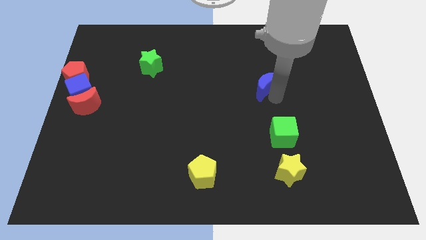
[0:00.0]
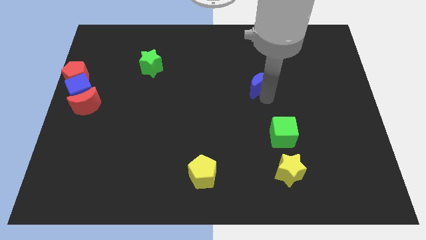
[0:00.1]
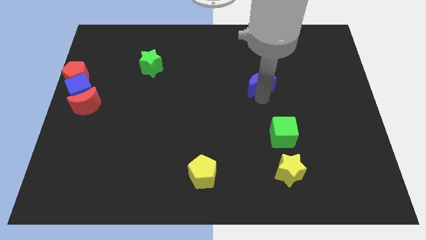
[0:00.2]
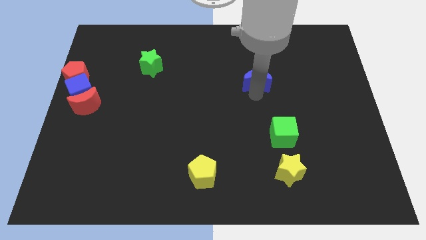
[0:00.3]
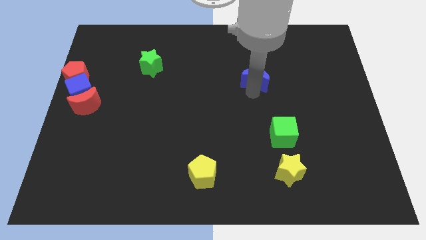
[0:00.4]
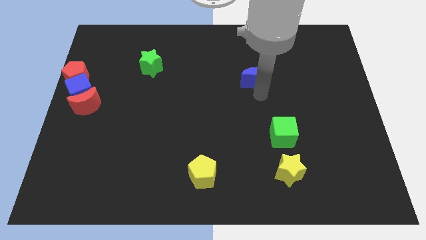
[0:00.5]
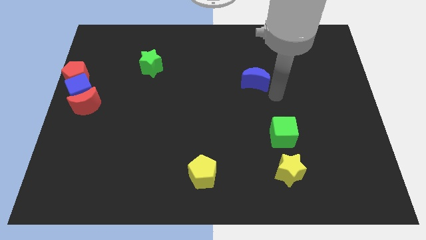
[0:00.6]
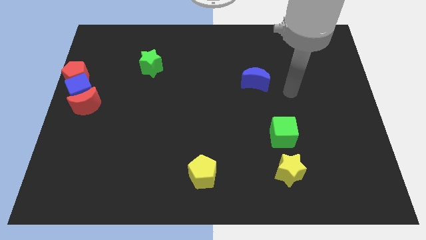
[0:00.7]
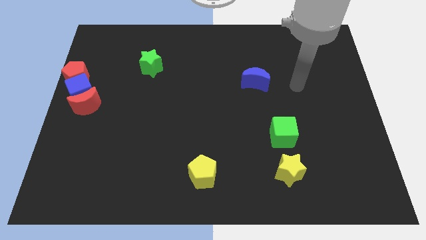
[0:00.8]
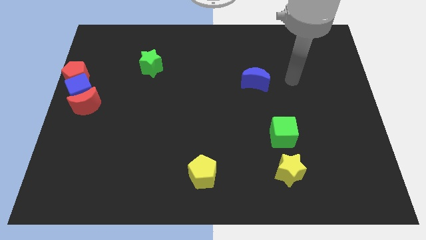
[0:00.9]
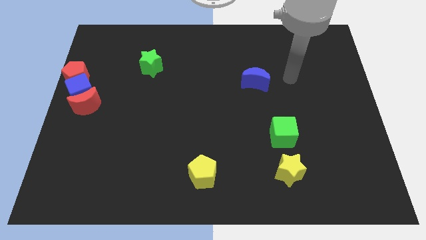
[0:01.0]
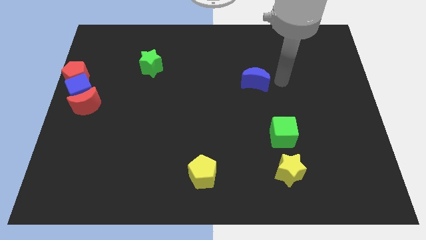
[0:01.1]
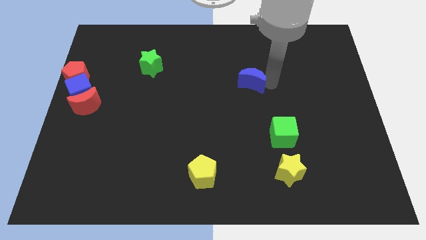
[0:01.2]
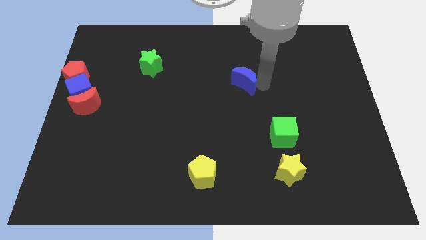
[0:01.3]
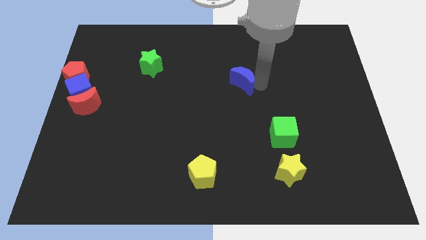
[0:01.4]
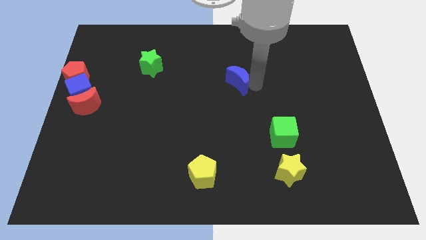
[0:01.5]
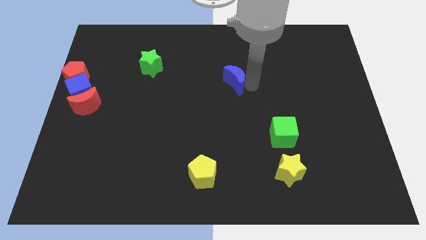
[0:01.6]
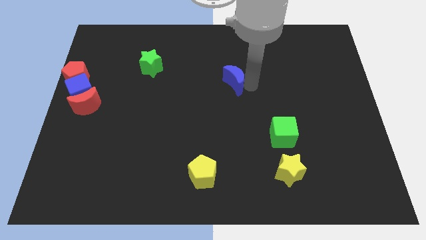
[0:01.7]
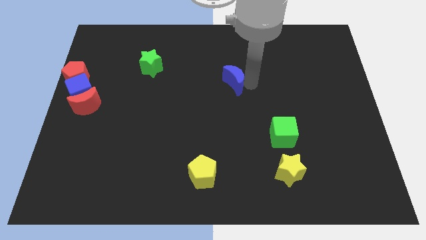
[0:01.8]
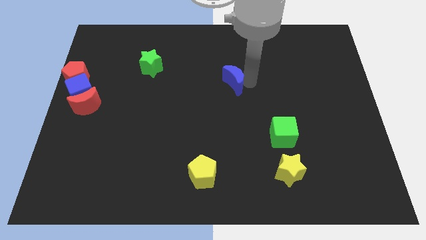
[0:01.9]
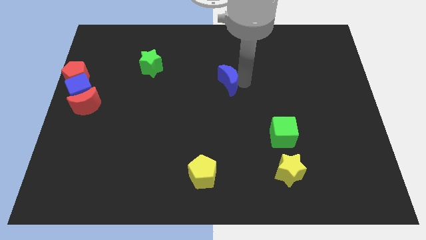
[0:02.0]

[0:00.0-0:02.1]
move the blue crescent slightly to the left

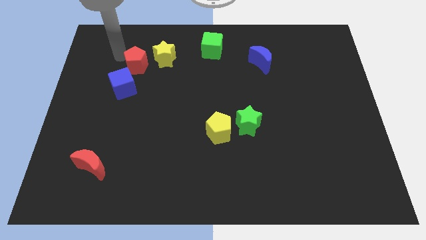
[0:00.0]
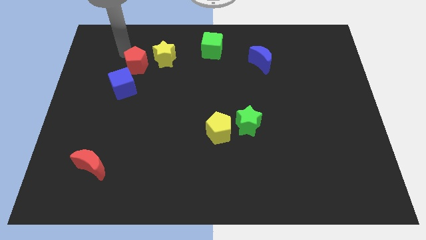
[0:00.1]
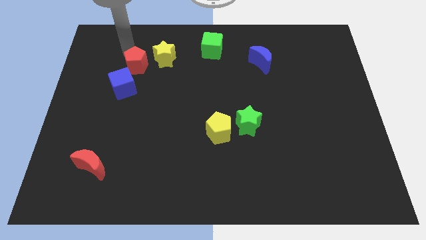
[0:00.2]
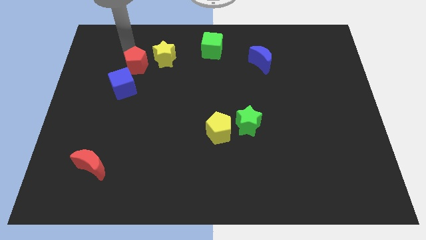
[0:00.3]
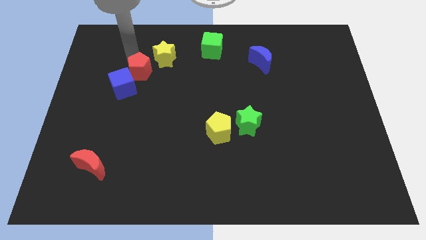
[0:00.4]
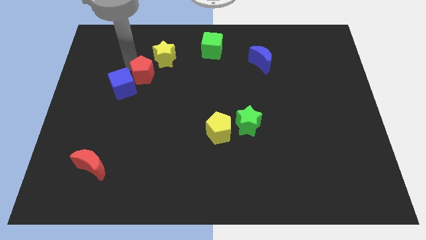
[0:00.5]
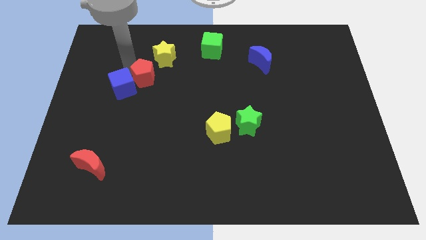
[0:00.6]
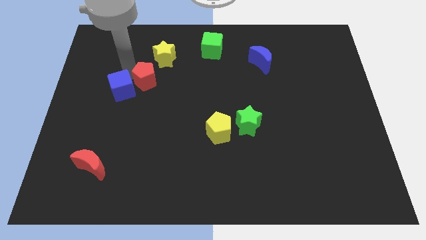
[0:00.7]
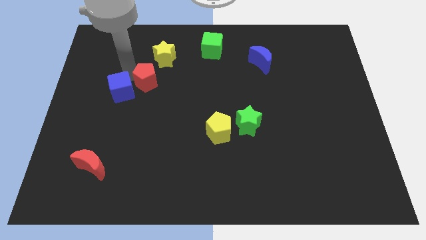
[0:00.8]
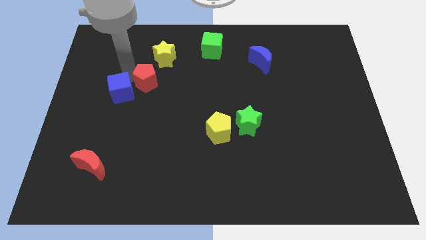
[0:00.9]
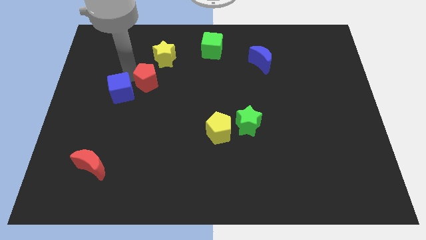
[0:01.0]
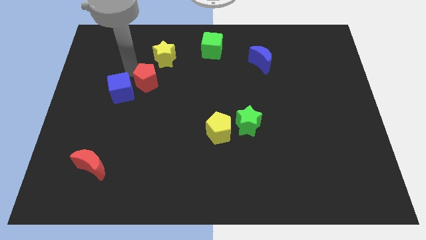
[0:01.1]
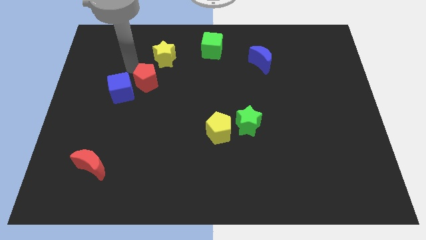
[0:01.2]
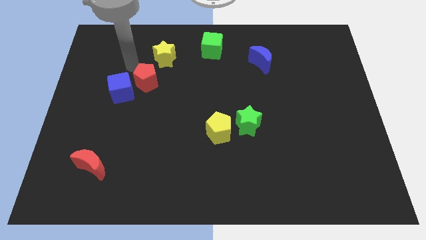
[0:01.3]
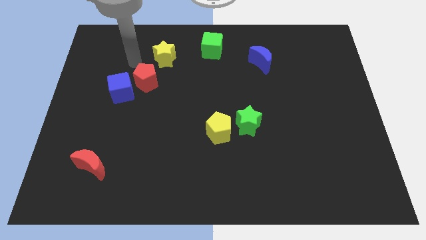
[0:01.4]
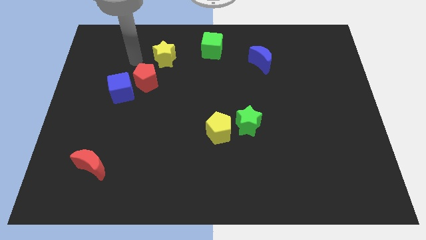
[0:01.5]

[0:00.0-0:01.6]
separate red pentagon and the blue cube

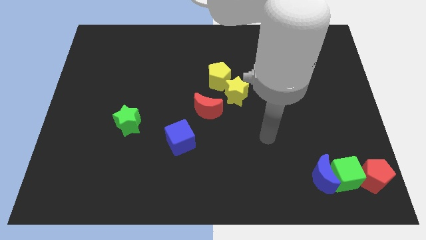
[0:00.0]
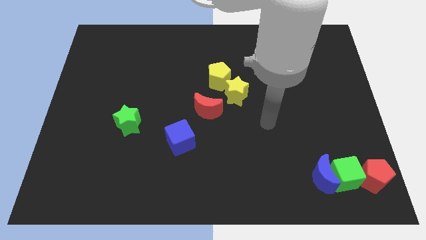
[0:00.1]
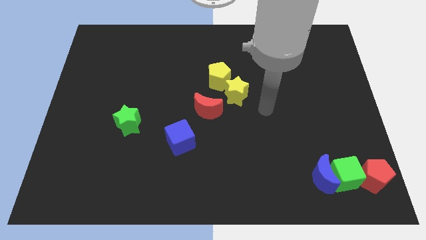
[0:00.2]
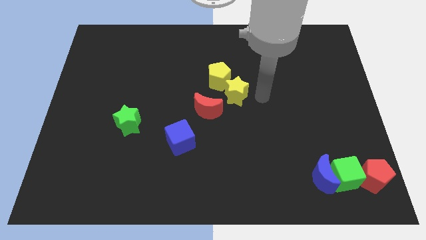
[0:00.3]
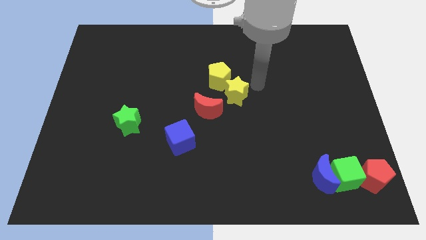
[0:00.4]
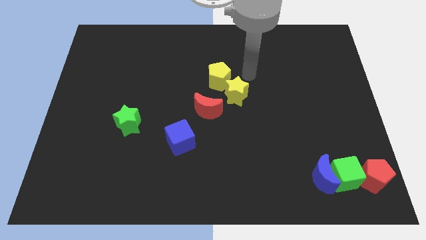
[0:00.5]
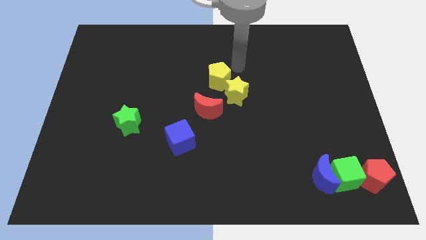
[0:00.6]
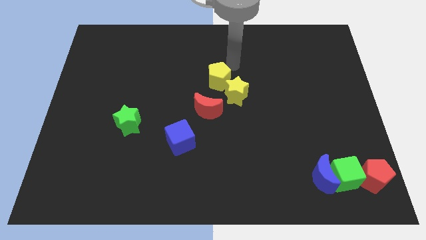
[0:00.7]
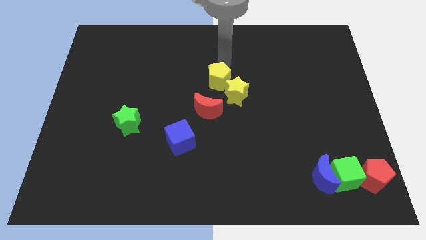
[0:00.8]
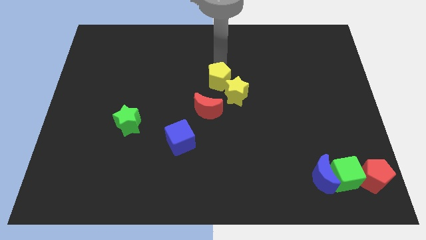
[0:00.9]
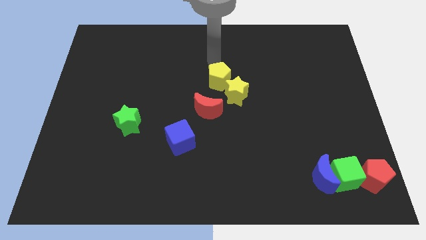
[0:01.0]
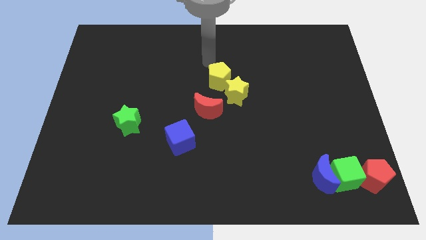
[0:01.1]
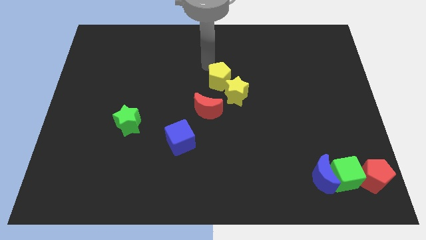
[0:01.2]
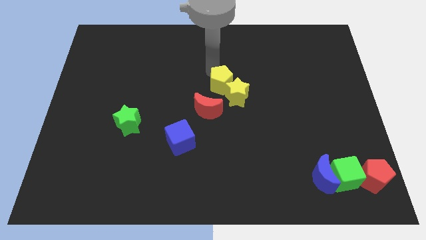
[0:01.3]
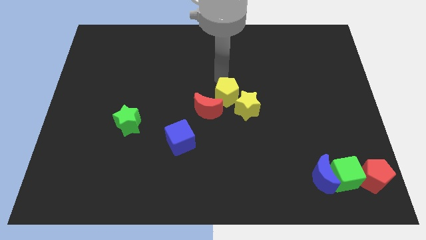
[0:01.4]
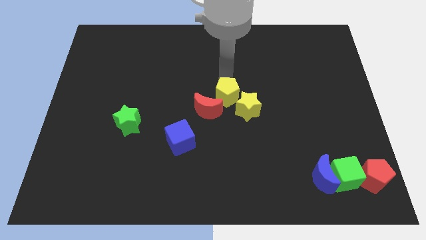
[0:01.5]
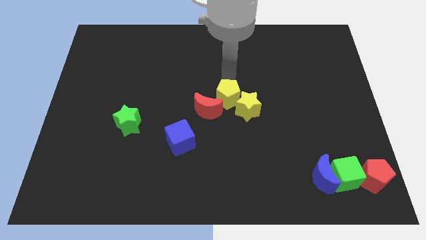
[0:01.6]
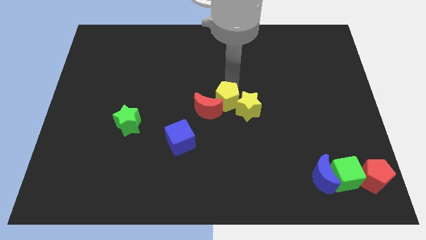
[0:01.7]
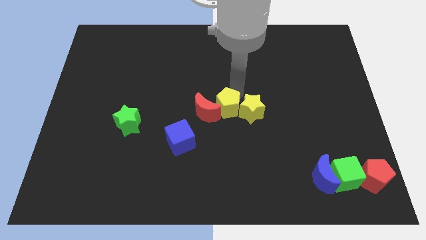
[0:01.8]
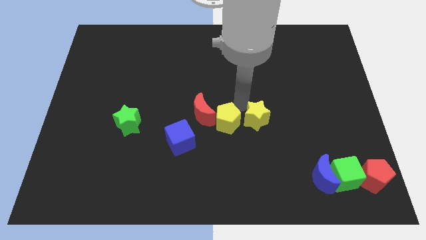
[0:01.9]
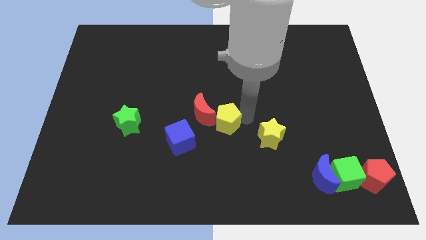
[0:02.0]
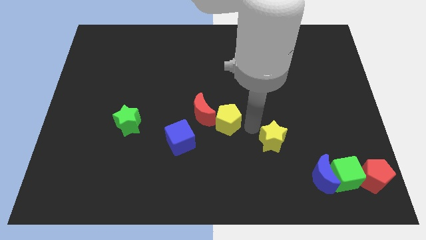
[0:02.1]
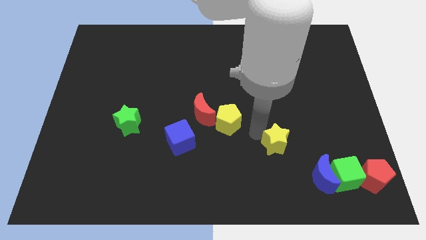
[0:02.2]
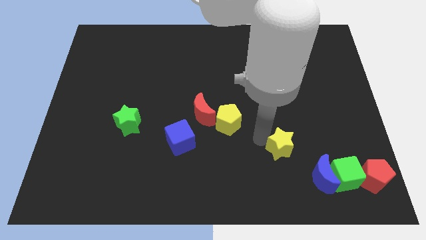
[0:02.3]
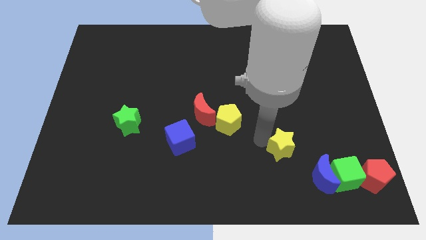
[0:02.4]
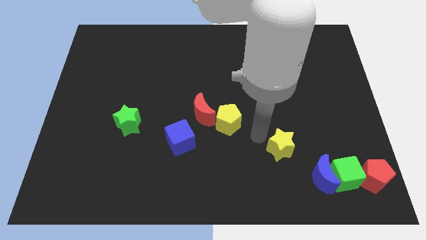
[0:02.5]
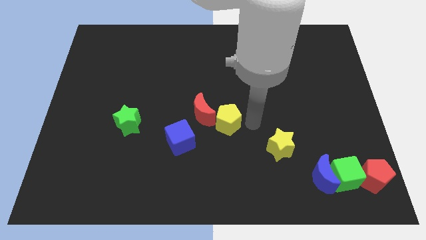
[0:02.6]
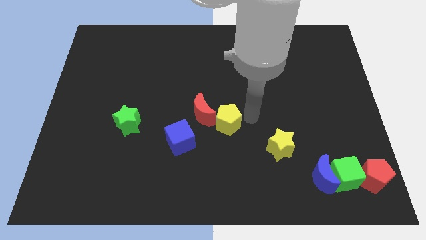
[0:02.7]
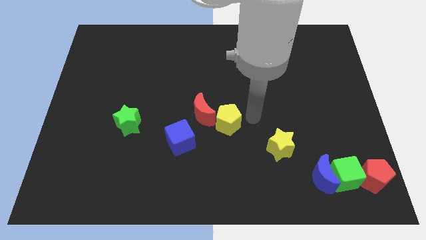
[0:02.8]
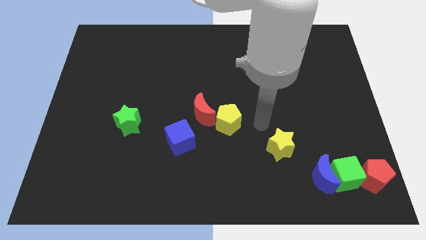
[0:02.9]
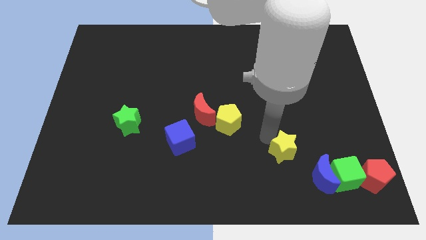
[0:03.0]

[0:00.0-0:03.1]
separate yellow star from yellow pentagon

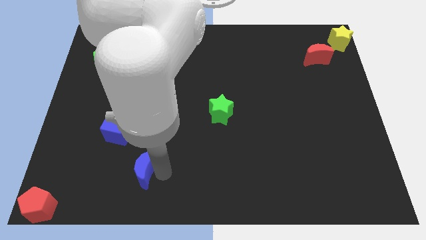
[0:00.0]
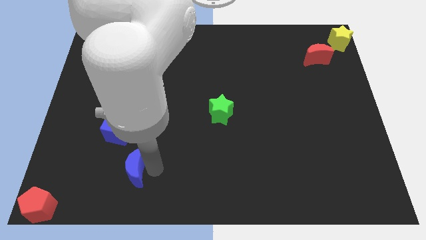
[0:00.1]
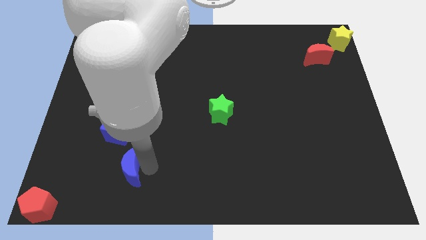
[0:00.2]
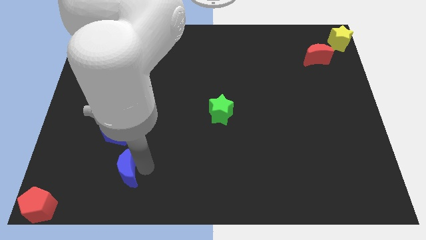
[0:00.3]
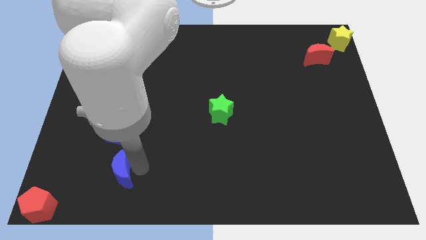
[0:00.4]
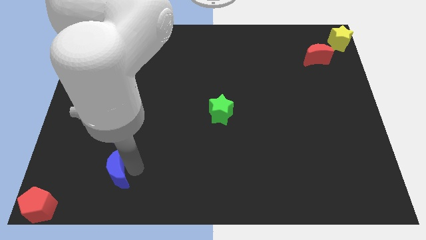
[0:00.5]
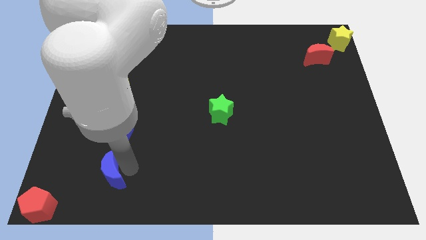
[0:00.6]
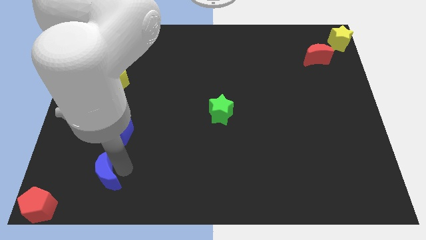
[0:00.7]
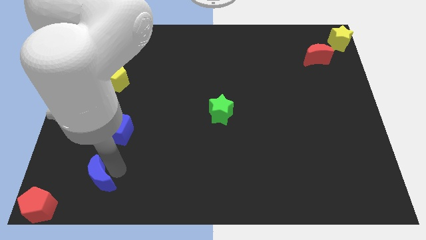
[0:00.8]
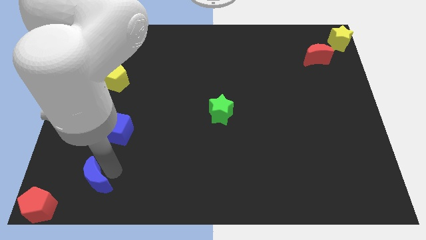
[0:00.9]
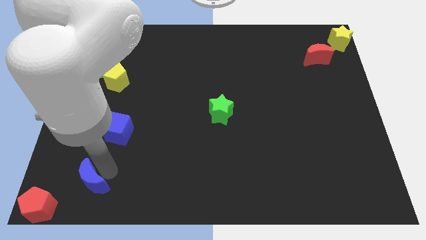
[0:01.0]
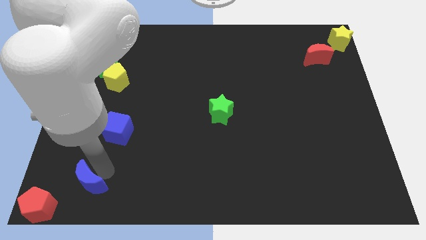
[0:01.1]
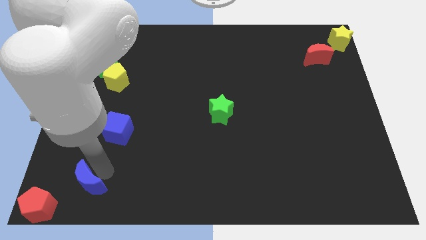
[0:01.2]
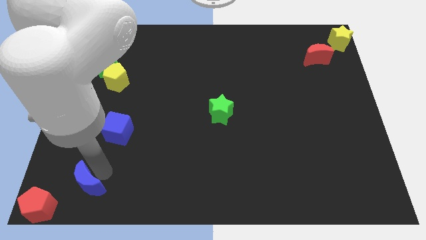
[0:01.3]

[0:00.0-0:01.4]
move the blue moon towards the red pentagon

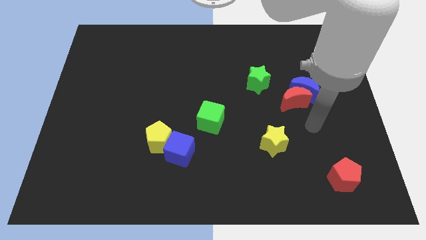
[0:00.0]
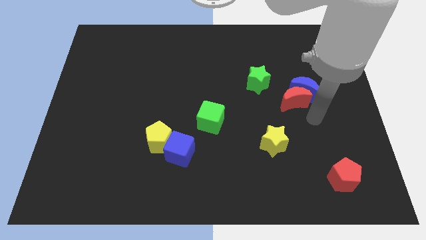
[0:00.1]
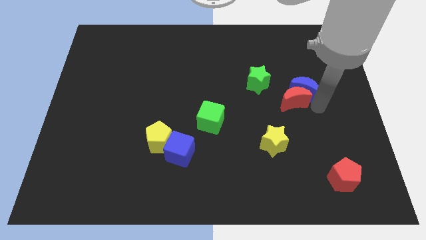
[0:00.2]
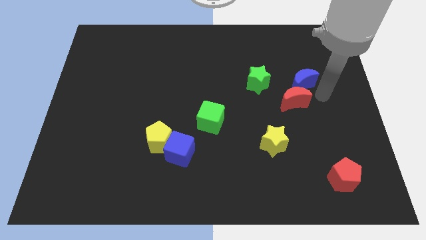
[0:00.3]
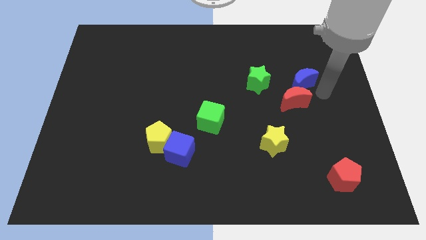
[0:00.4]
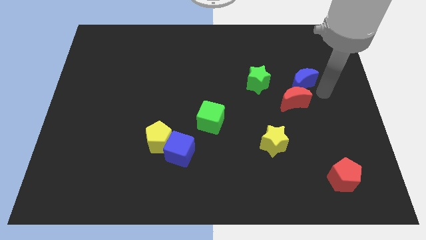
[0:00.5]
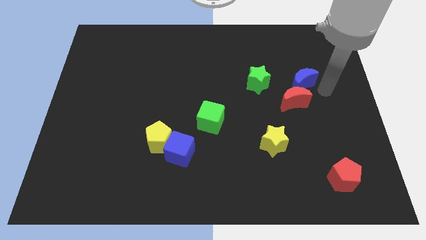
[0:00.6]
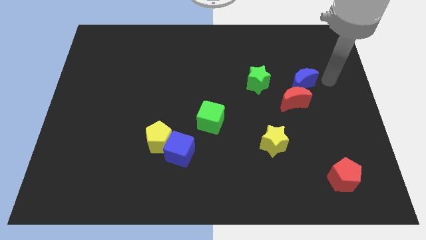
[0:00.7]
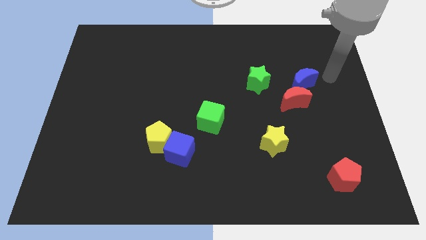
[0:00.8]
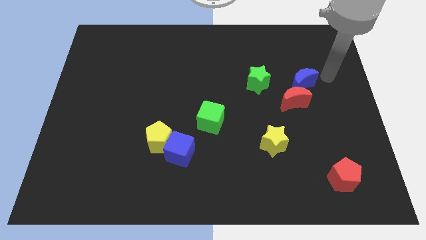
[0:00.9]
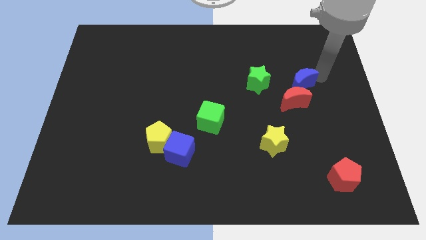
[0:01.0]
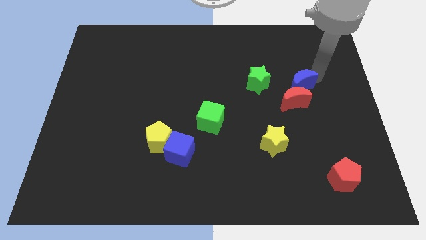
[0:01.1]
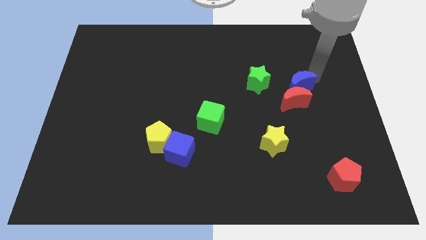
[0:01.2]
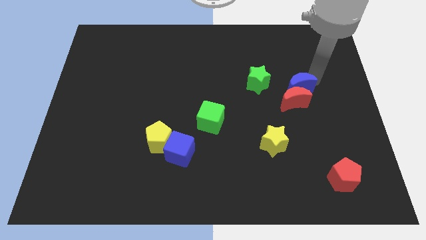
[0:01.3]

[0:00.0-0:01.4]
place your arm above blue moon
